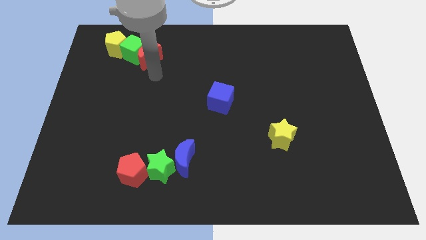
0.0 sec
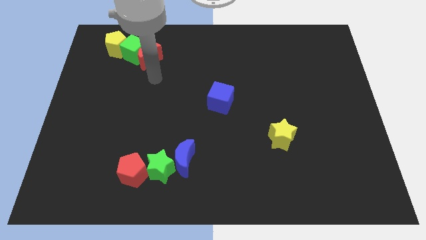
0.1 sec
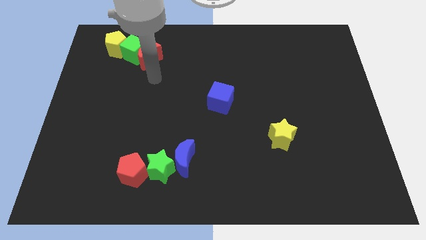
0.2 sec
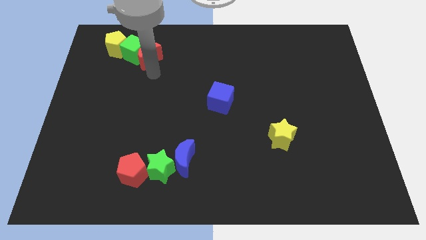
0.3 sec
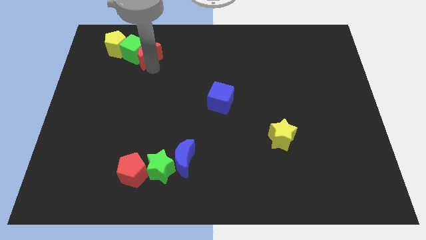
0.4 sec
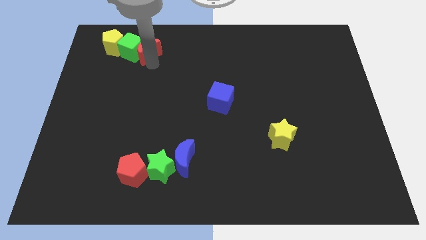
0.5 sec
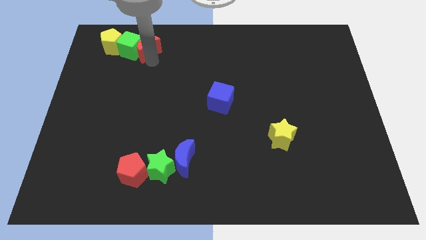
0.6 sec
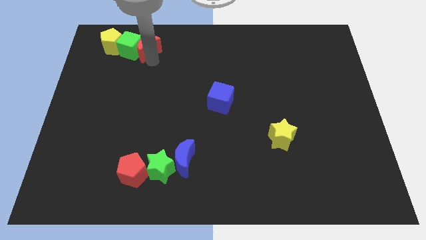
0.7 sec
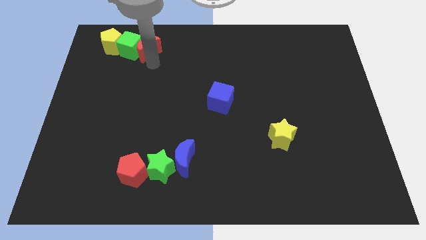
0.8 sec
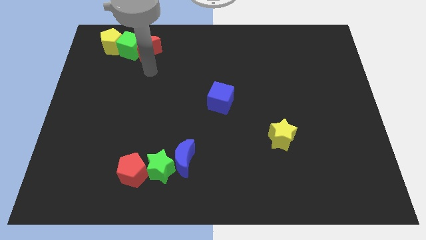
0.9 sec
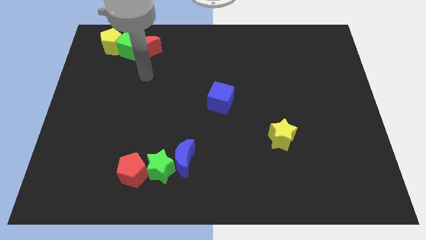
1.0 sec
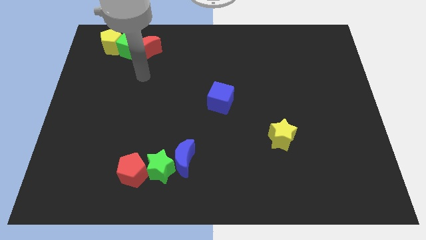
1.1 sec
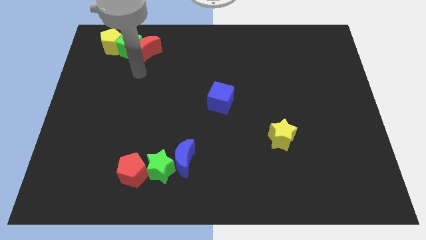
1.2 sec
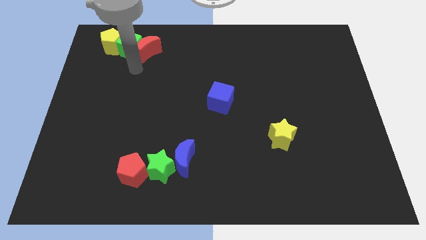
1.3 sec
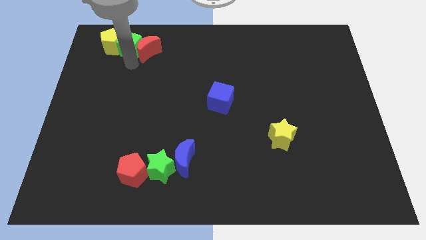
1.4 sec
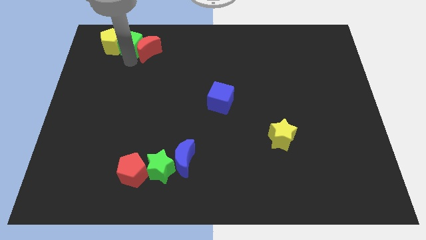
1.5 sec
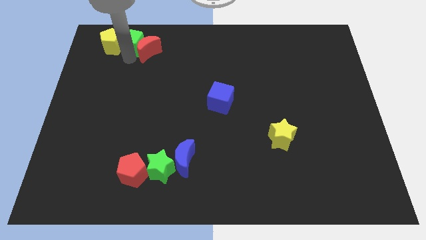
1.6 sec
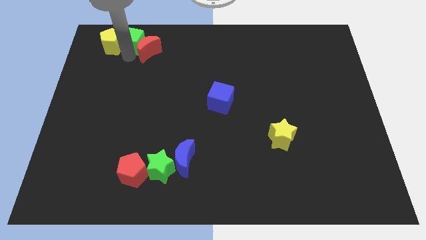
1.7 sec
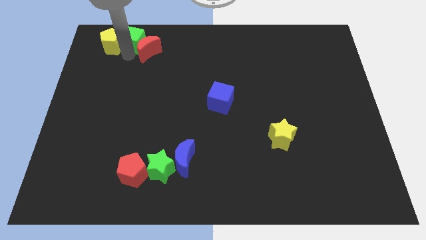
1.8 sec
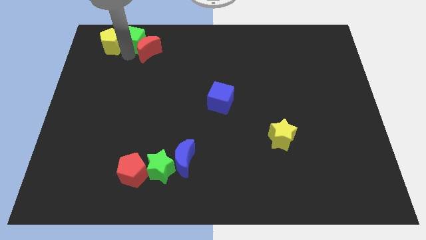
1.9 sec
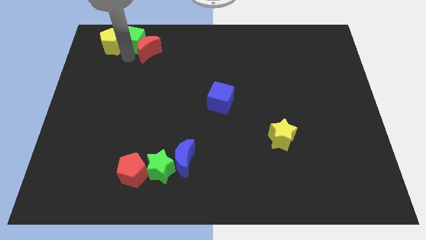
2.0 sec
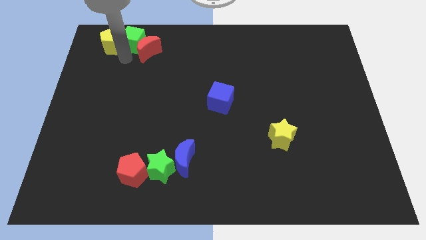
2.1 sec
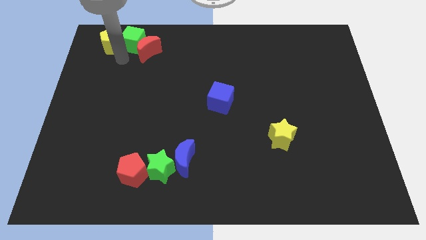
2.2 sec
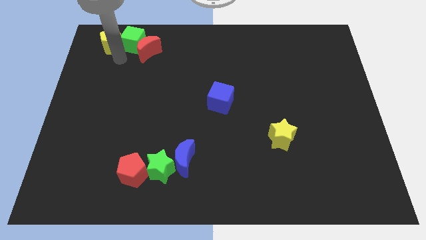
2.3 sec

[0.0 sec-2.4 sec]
move green cube slightly up

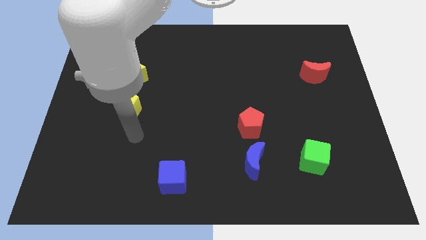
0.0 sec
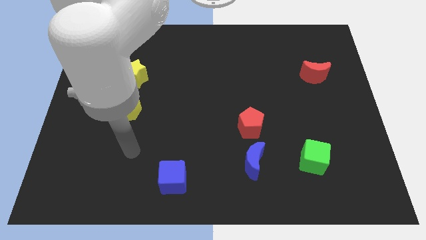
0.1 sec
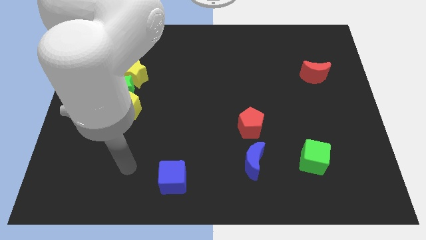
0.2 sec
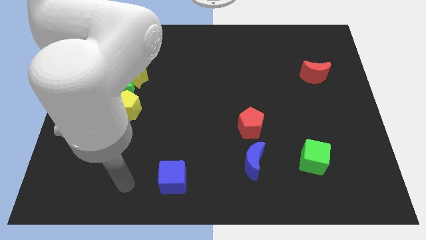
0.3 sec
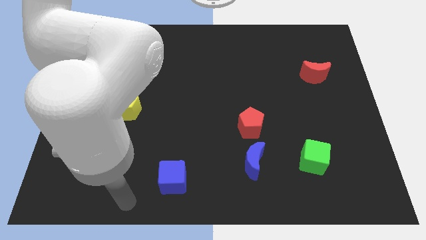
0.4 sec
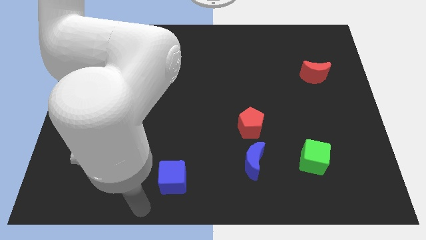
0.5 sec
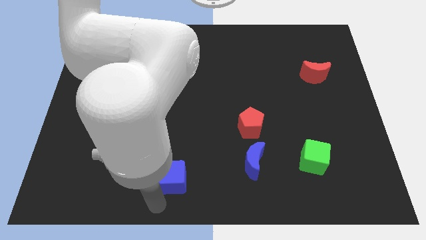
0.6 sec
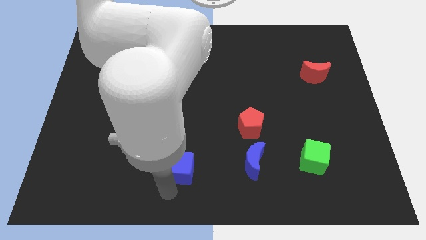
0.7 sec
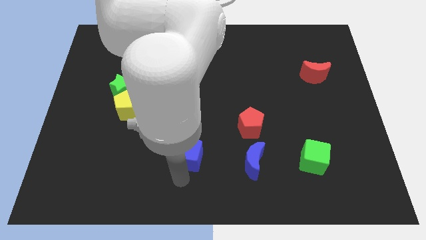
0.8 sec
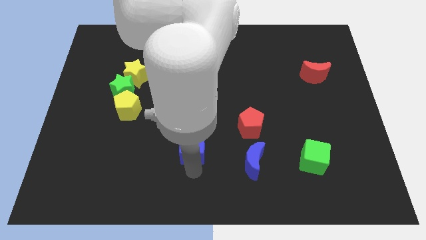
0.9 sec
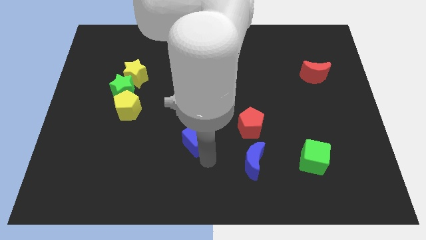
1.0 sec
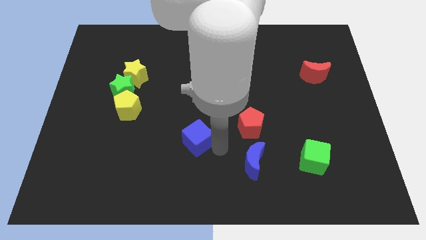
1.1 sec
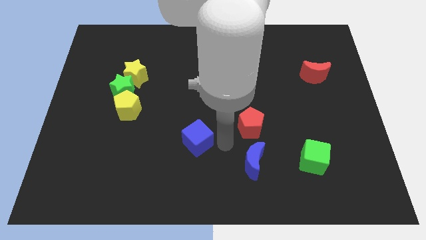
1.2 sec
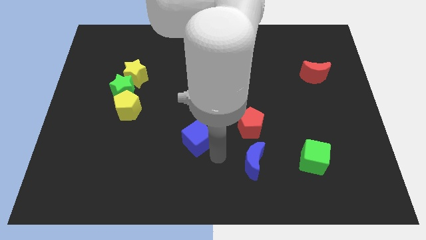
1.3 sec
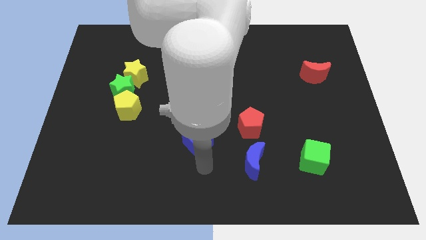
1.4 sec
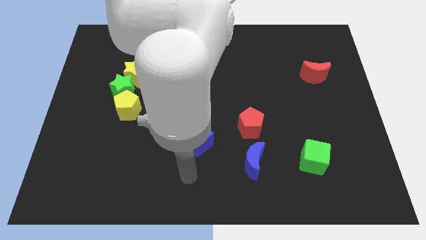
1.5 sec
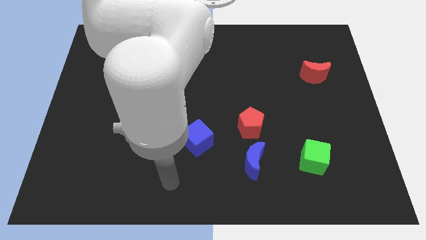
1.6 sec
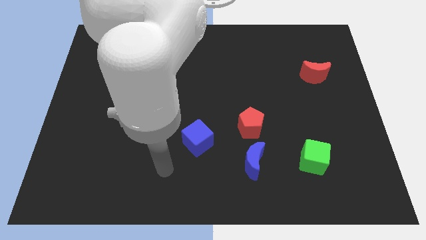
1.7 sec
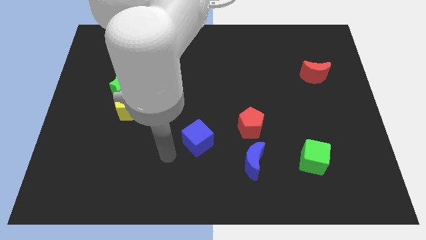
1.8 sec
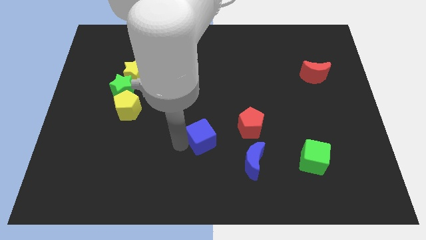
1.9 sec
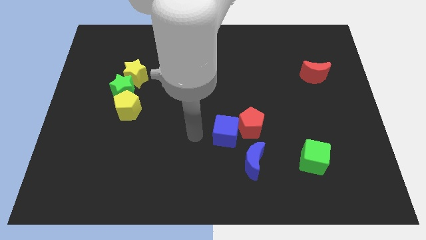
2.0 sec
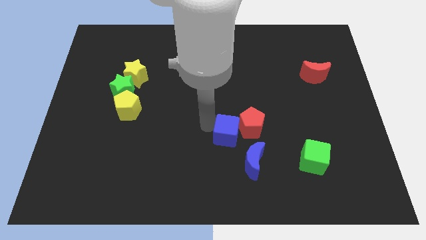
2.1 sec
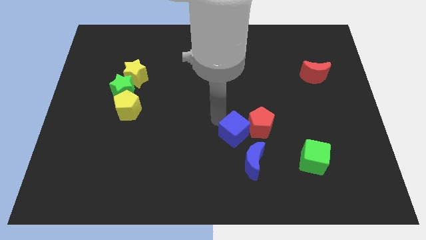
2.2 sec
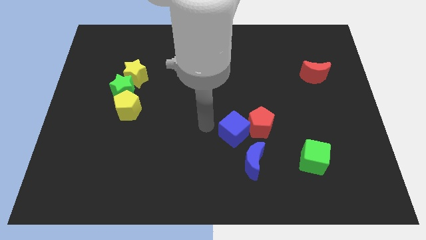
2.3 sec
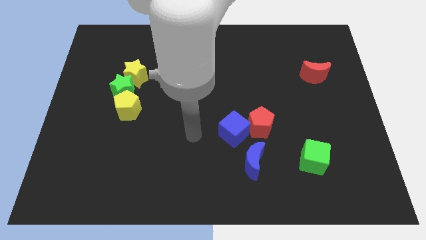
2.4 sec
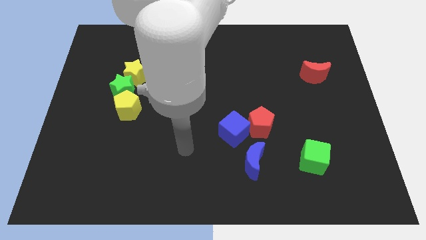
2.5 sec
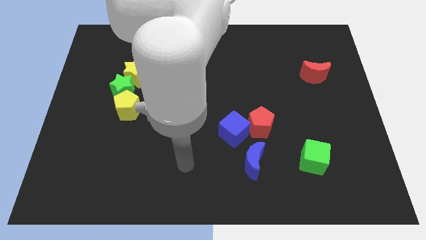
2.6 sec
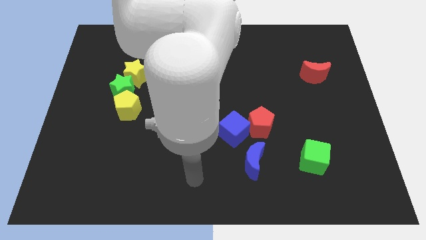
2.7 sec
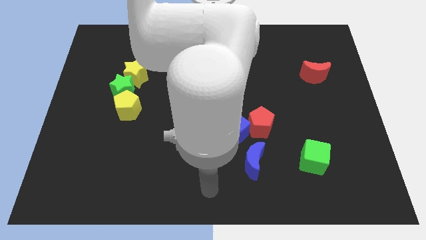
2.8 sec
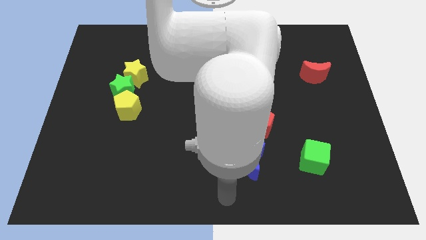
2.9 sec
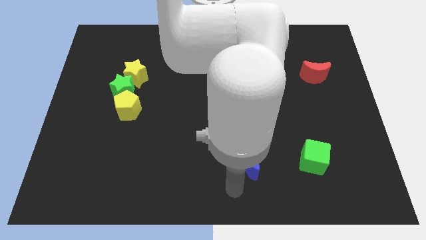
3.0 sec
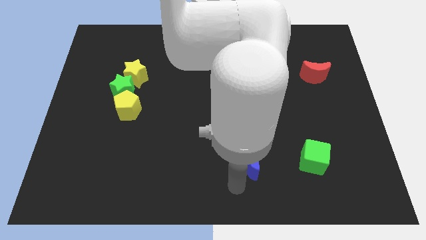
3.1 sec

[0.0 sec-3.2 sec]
move the blue cube to the left of the red pentagon

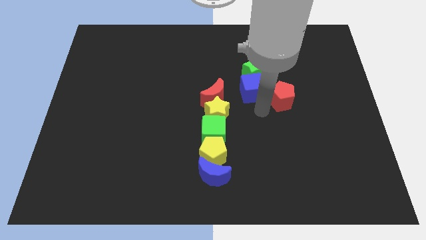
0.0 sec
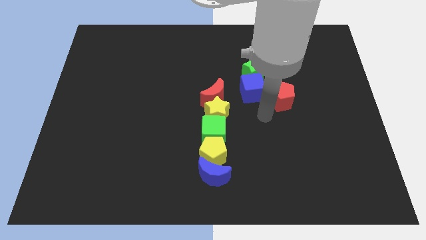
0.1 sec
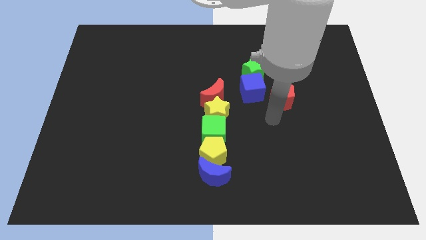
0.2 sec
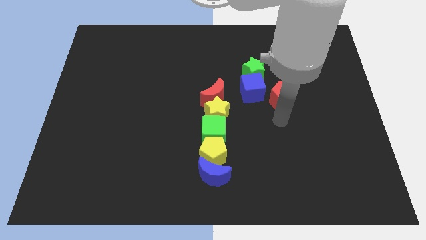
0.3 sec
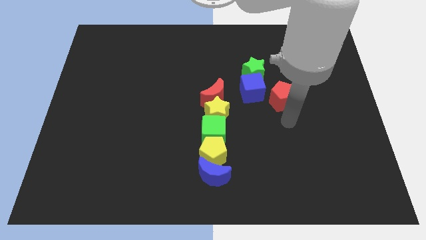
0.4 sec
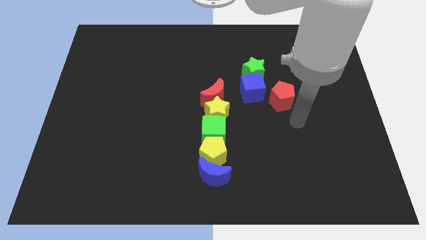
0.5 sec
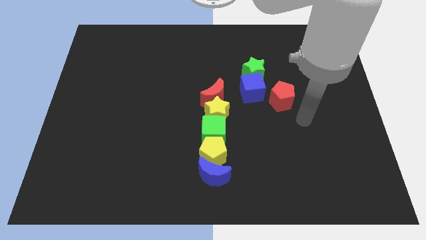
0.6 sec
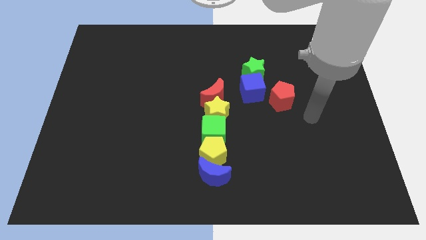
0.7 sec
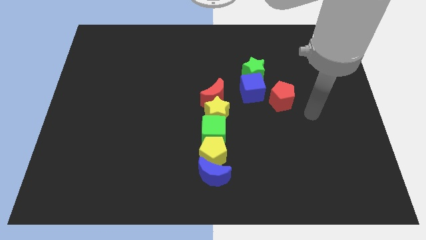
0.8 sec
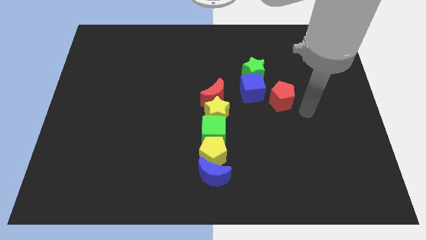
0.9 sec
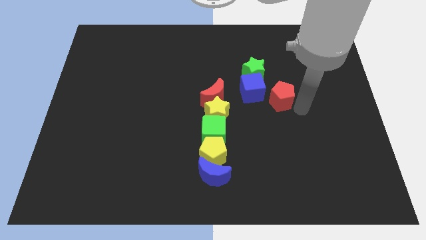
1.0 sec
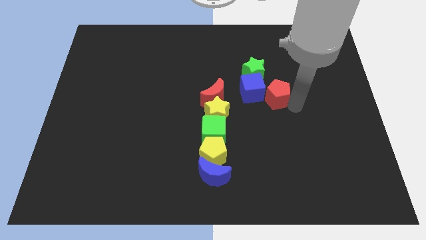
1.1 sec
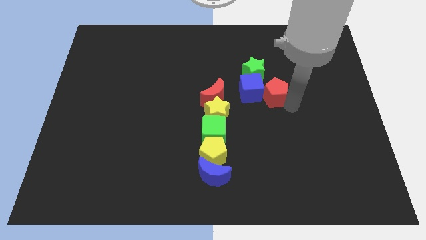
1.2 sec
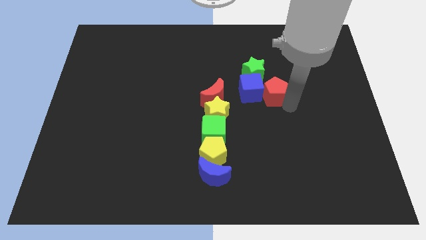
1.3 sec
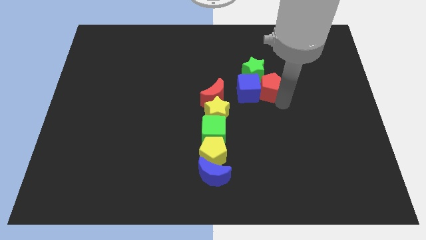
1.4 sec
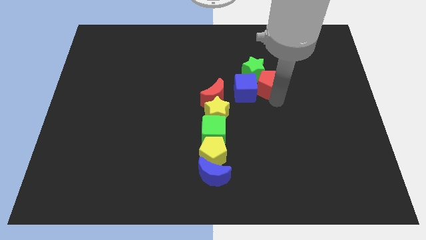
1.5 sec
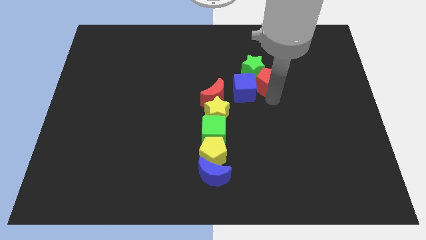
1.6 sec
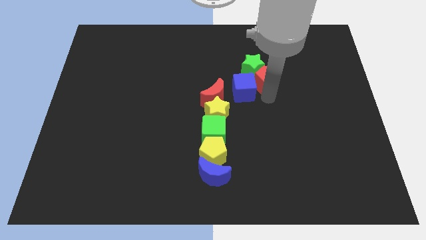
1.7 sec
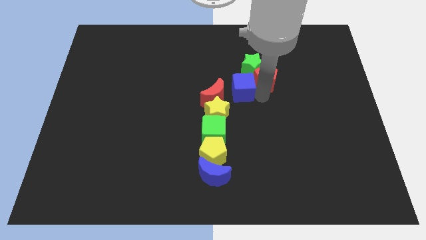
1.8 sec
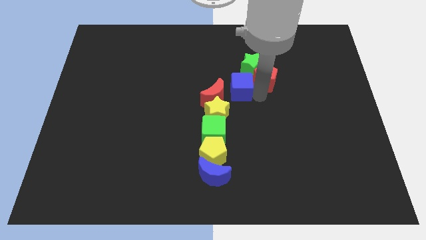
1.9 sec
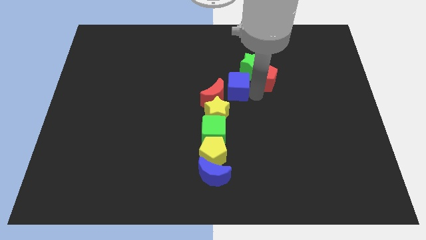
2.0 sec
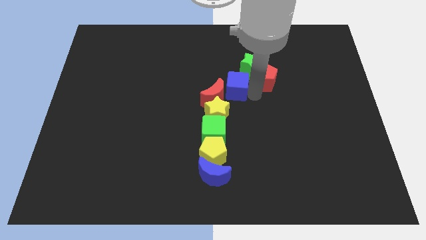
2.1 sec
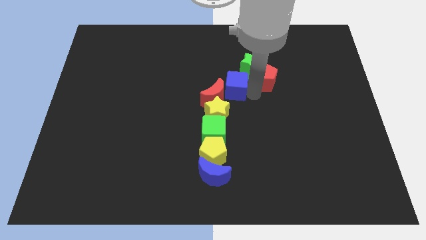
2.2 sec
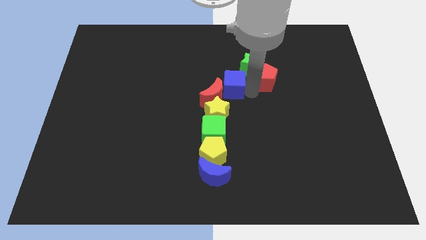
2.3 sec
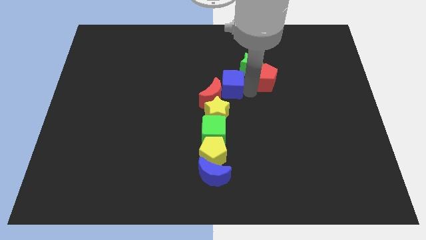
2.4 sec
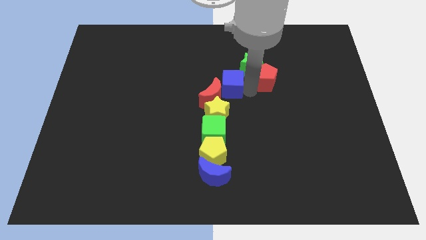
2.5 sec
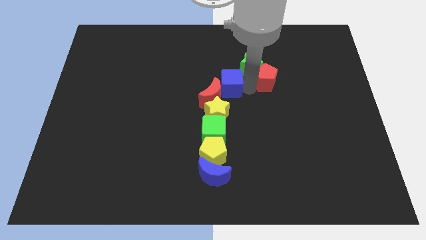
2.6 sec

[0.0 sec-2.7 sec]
push the red pentagon into the green star

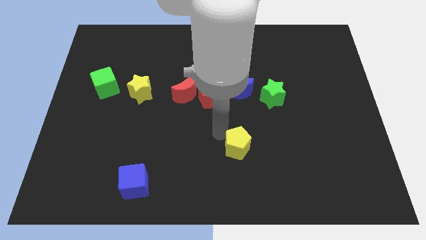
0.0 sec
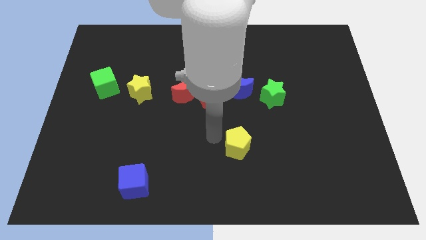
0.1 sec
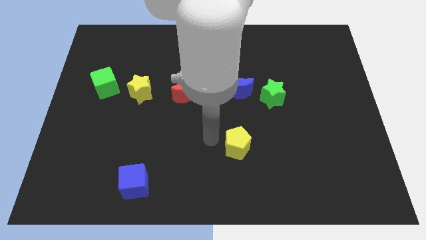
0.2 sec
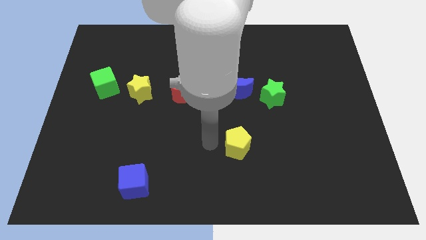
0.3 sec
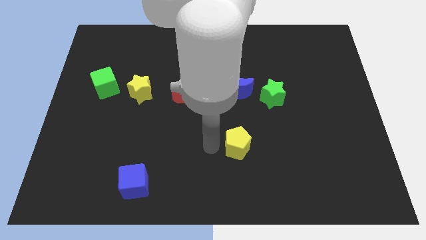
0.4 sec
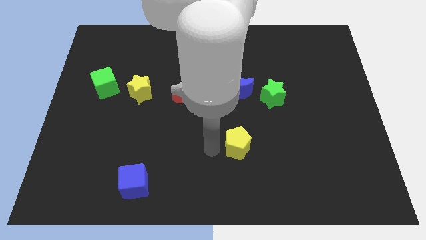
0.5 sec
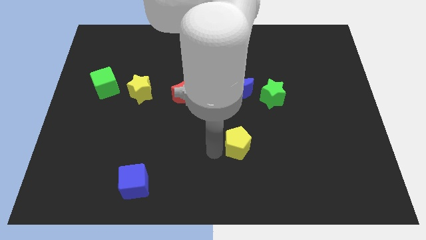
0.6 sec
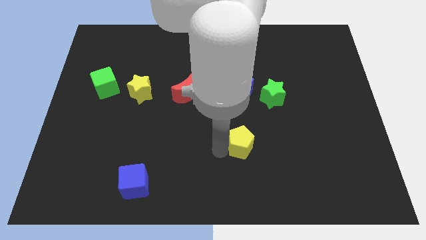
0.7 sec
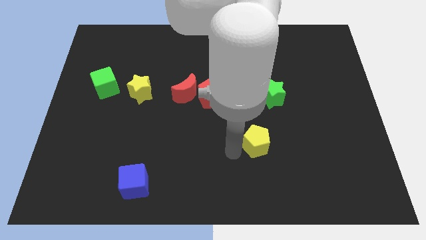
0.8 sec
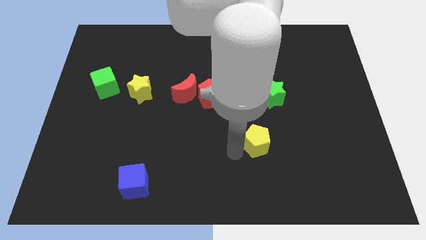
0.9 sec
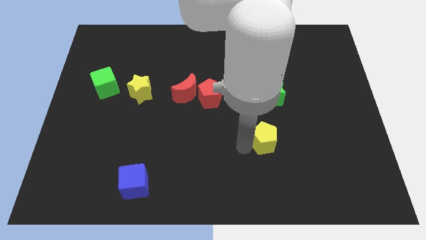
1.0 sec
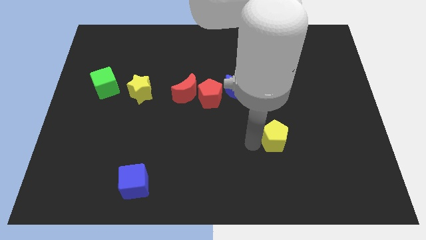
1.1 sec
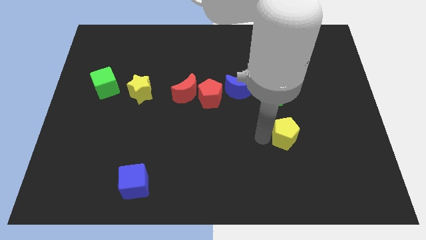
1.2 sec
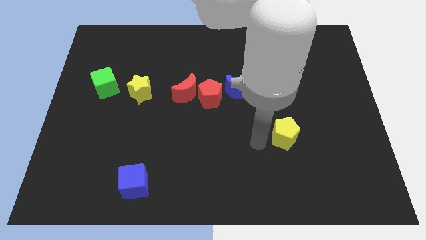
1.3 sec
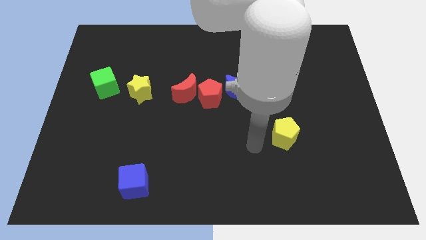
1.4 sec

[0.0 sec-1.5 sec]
slide the yellow pentagon on the bottom side of the green star
